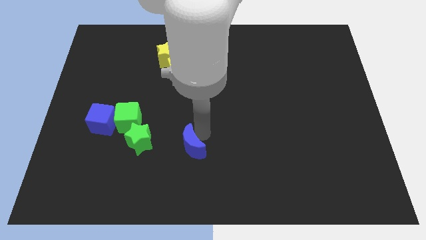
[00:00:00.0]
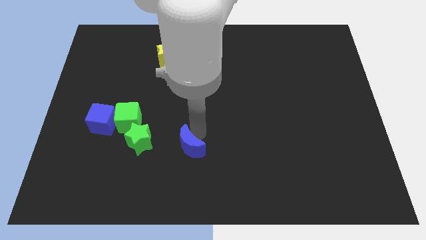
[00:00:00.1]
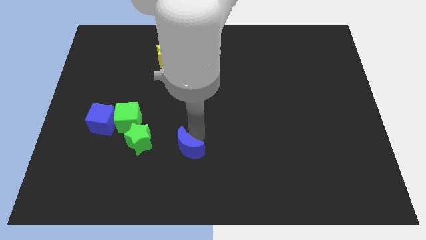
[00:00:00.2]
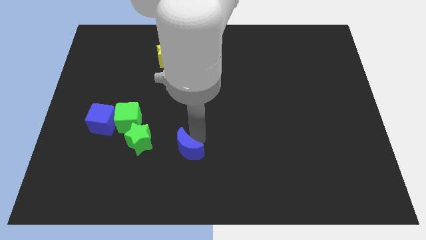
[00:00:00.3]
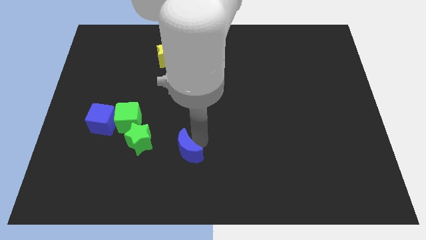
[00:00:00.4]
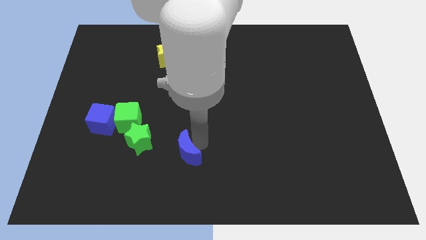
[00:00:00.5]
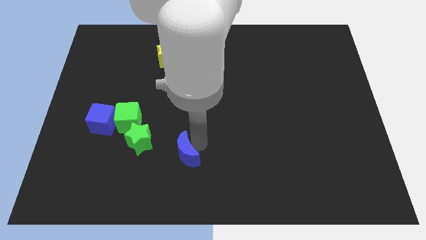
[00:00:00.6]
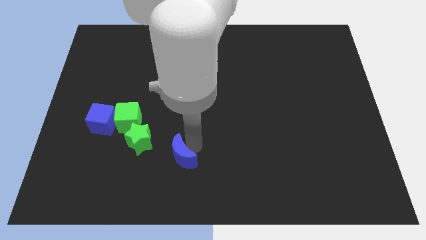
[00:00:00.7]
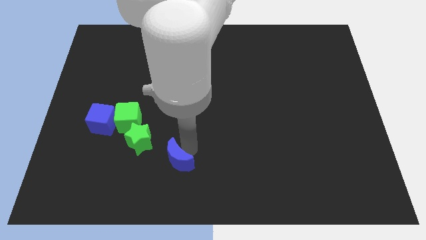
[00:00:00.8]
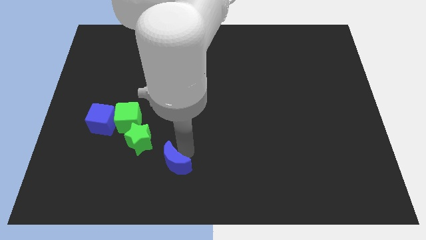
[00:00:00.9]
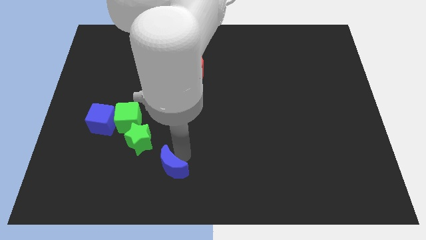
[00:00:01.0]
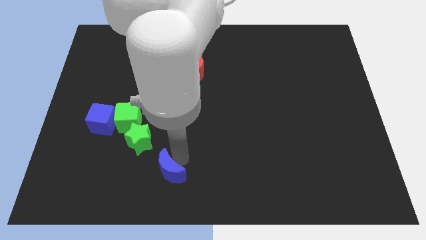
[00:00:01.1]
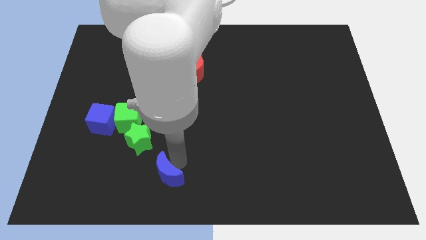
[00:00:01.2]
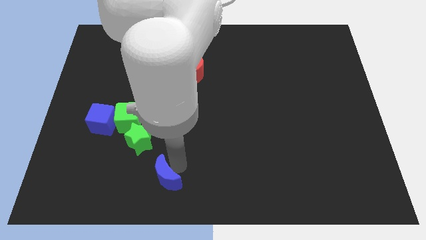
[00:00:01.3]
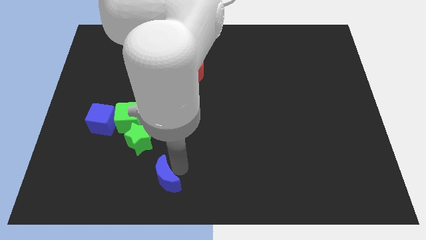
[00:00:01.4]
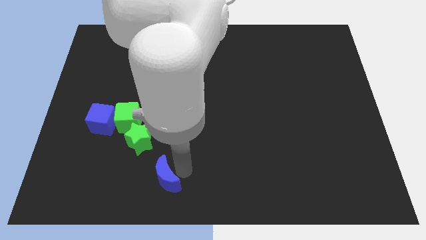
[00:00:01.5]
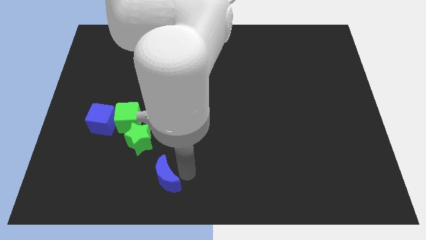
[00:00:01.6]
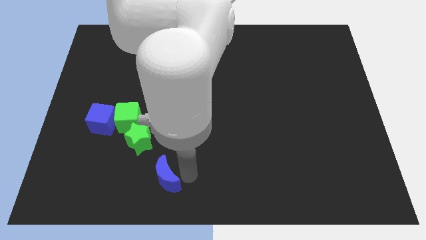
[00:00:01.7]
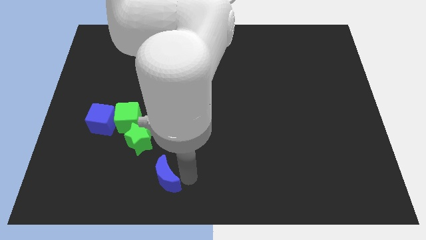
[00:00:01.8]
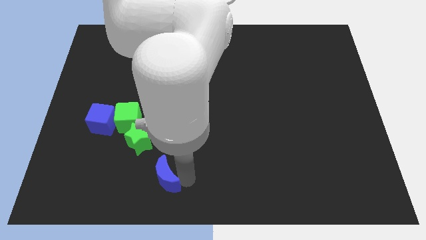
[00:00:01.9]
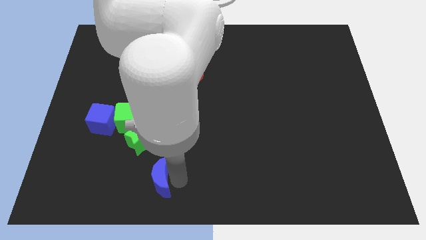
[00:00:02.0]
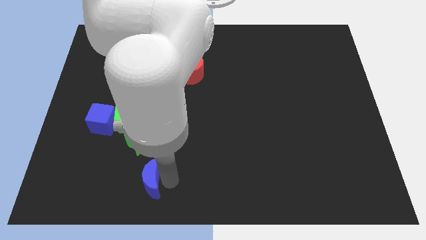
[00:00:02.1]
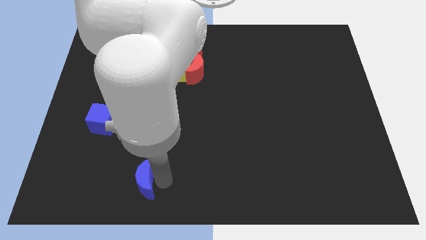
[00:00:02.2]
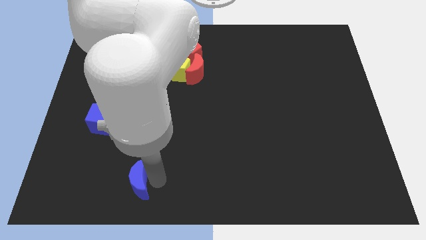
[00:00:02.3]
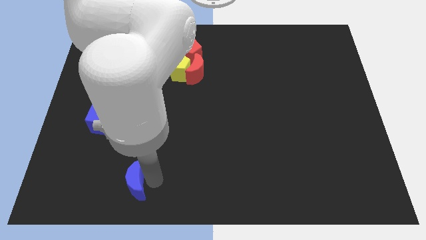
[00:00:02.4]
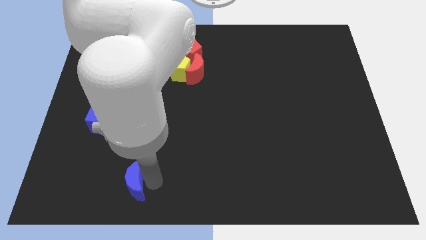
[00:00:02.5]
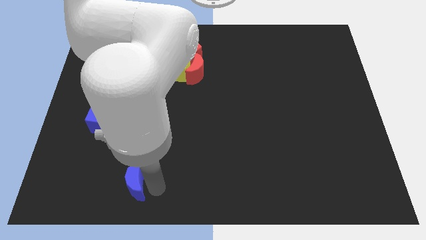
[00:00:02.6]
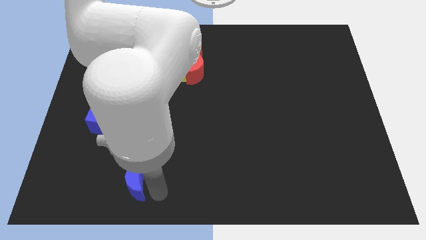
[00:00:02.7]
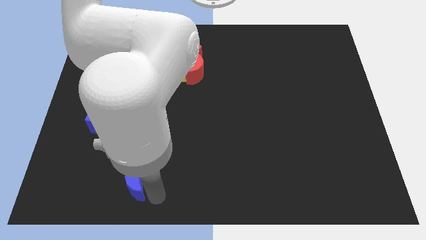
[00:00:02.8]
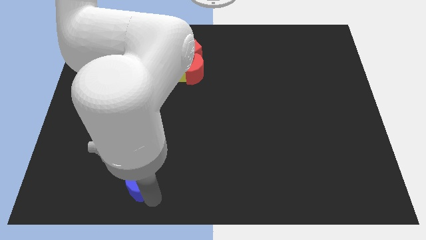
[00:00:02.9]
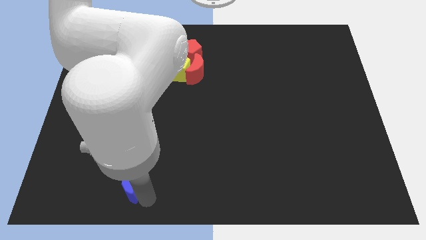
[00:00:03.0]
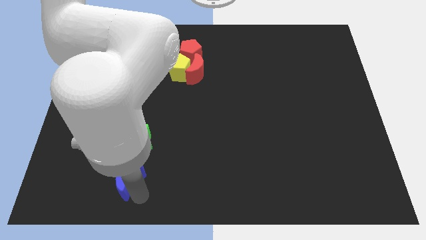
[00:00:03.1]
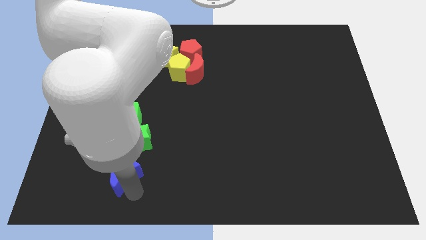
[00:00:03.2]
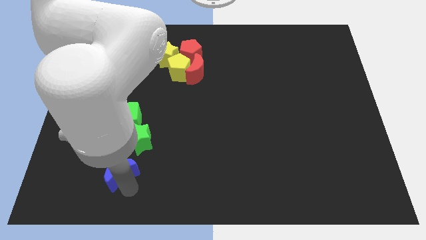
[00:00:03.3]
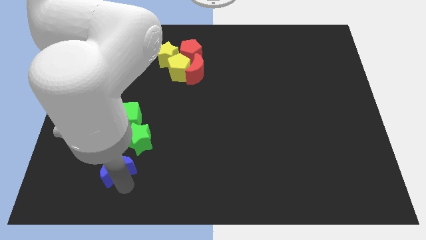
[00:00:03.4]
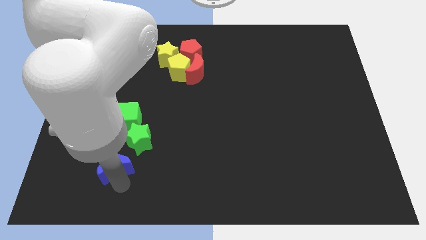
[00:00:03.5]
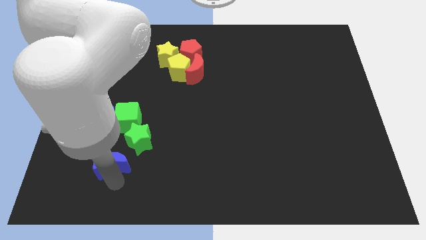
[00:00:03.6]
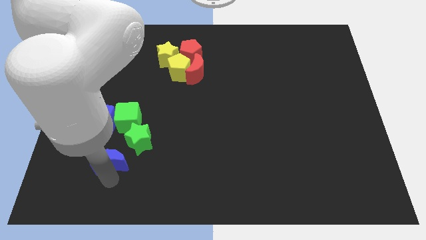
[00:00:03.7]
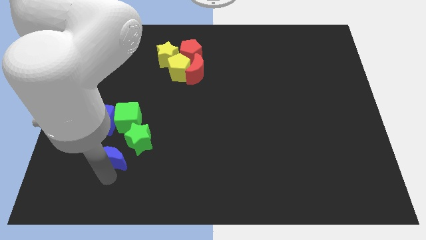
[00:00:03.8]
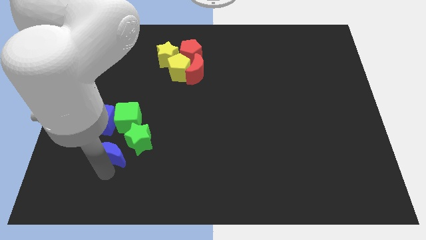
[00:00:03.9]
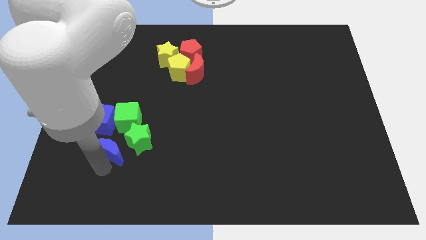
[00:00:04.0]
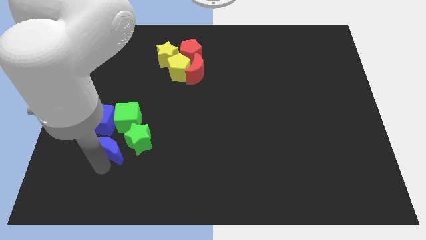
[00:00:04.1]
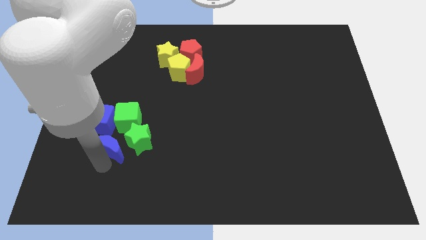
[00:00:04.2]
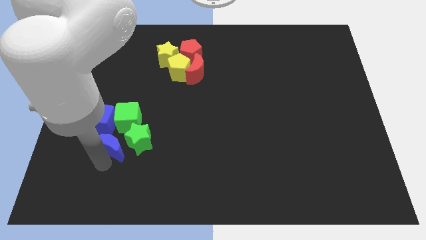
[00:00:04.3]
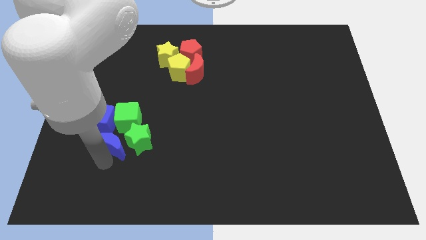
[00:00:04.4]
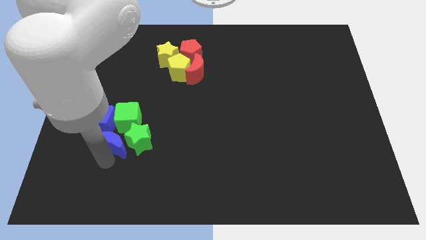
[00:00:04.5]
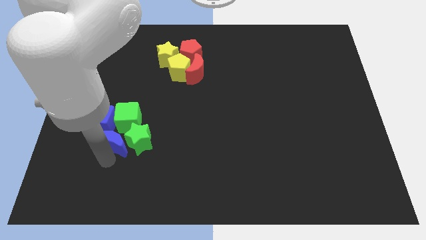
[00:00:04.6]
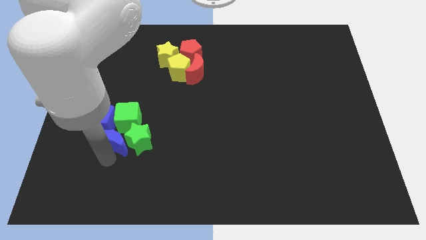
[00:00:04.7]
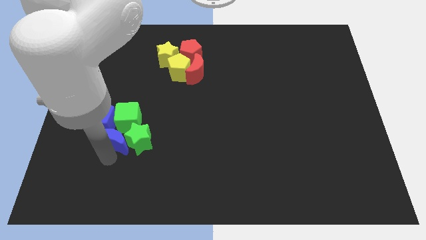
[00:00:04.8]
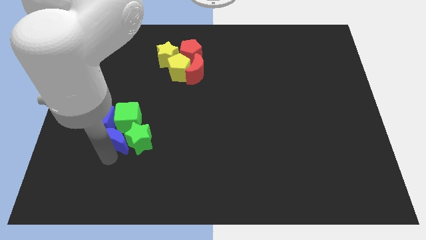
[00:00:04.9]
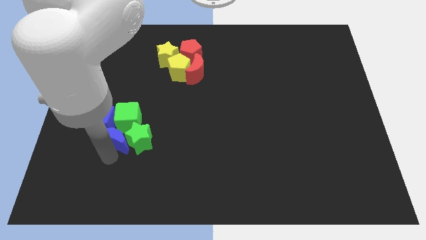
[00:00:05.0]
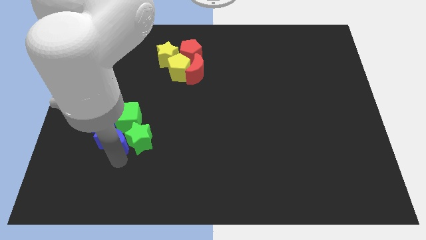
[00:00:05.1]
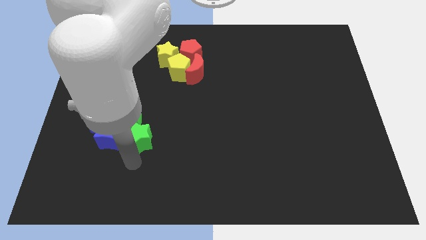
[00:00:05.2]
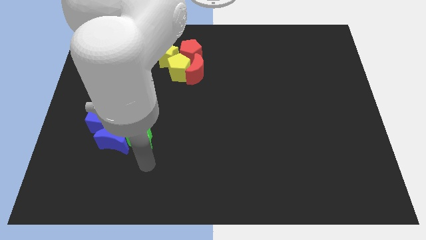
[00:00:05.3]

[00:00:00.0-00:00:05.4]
move the blue crescent to the left of the green star

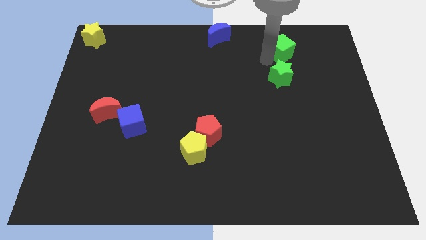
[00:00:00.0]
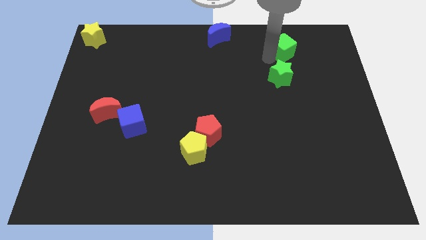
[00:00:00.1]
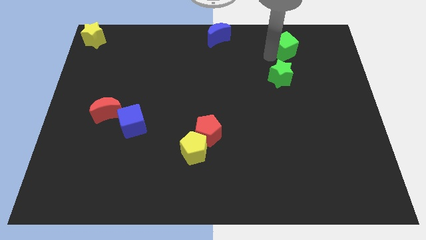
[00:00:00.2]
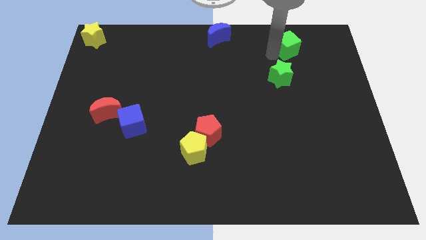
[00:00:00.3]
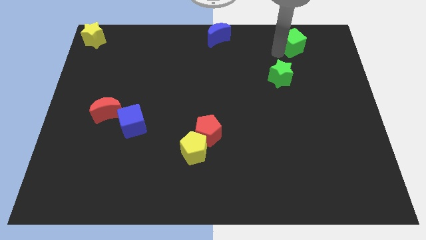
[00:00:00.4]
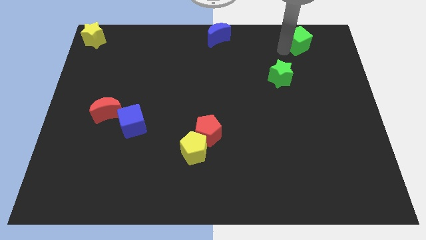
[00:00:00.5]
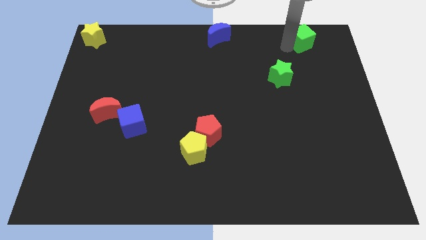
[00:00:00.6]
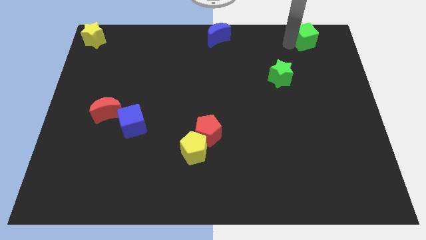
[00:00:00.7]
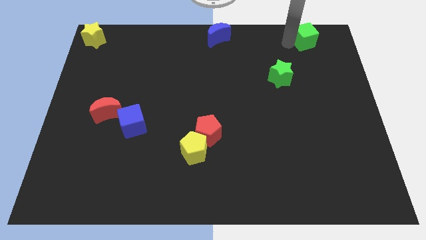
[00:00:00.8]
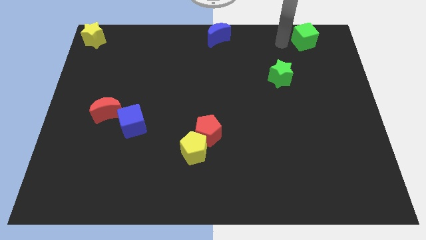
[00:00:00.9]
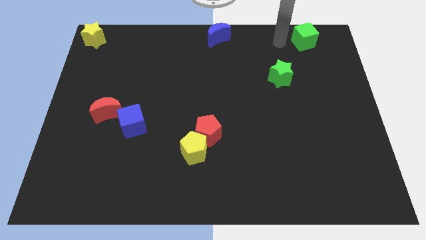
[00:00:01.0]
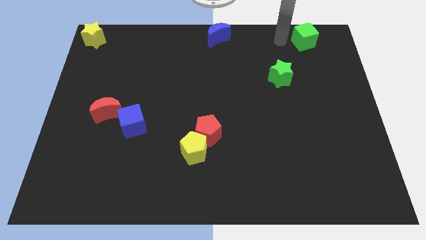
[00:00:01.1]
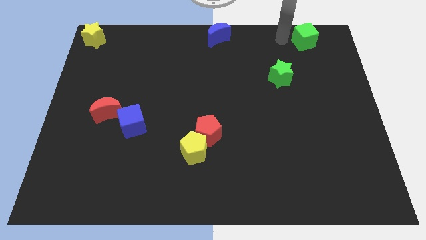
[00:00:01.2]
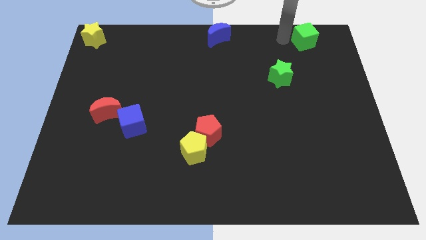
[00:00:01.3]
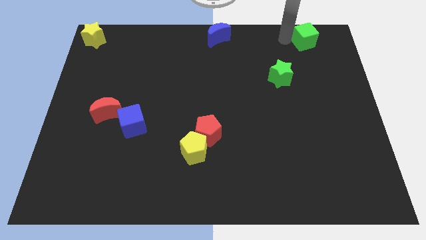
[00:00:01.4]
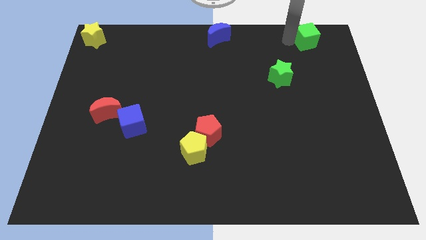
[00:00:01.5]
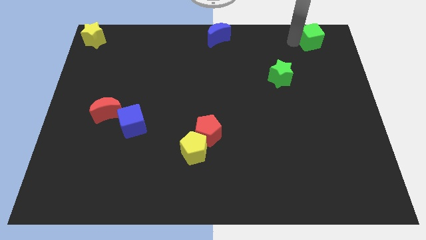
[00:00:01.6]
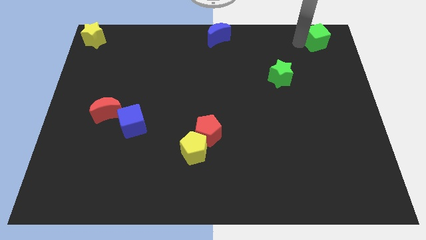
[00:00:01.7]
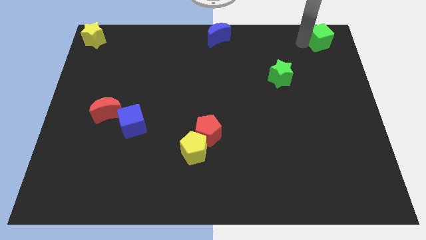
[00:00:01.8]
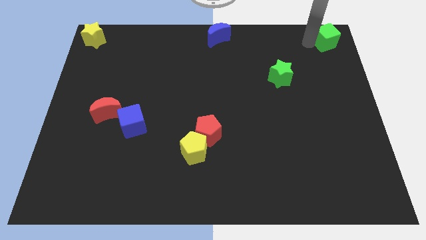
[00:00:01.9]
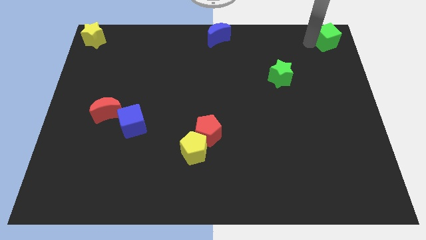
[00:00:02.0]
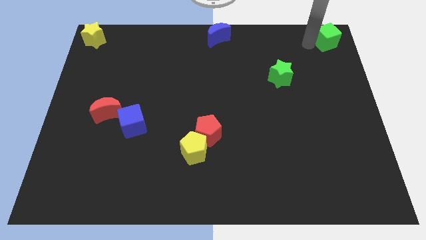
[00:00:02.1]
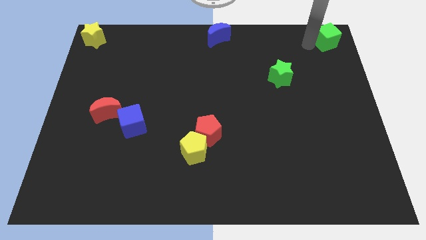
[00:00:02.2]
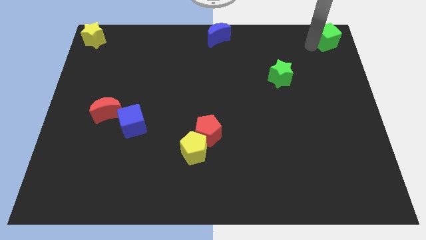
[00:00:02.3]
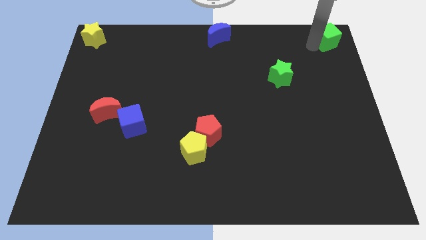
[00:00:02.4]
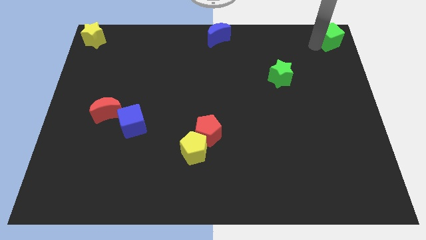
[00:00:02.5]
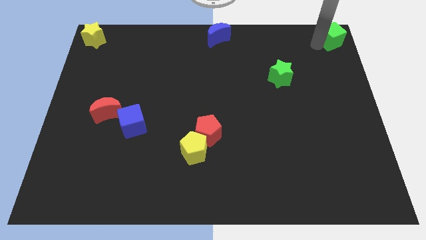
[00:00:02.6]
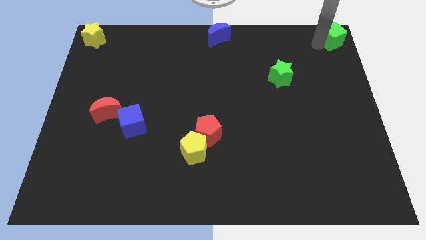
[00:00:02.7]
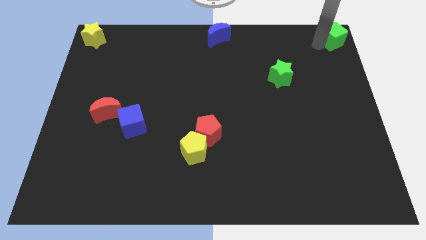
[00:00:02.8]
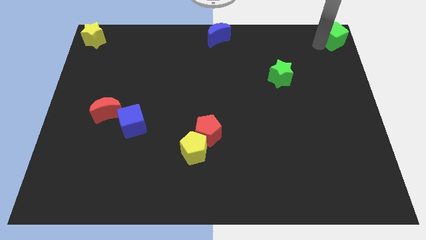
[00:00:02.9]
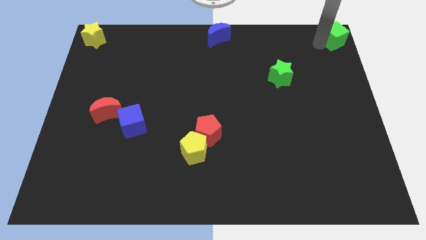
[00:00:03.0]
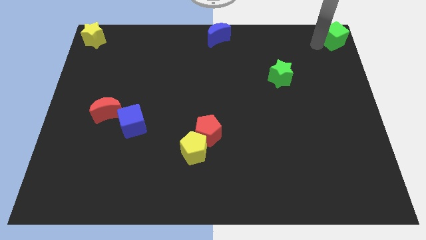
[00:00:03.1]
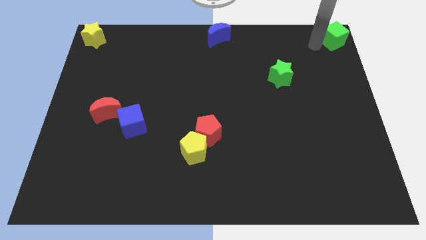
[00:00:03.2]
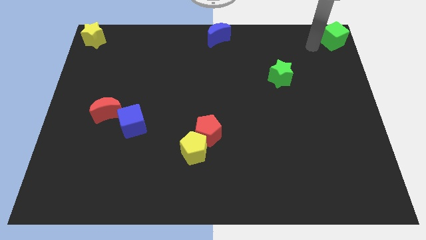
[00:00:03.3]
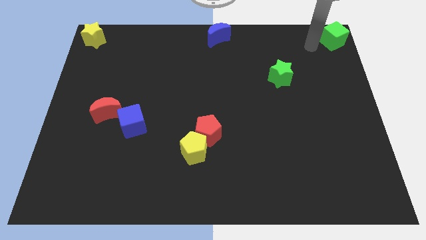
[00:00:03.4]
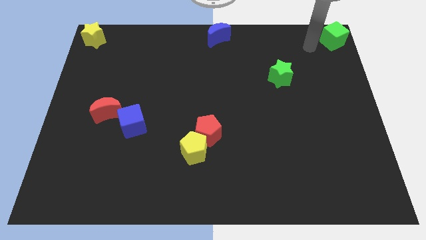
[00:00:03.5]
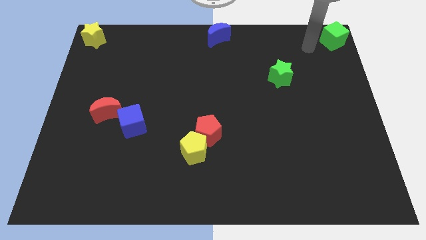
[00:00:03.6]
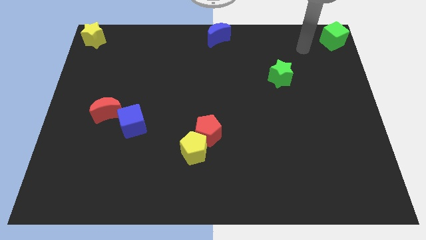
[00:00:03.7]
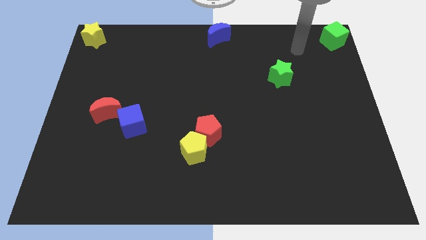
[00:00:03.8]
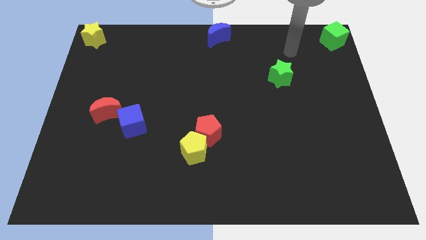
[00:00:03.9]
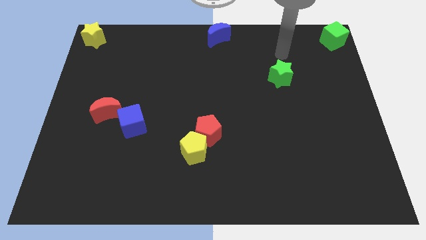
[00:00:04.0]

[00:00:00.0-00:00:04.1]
move the green cube to the top right corner of the board
